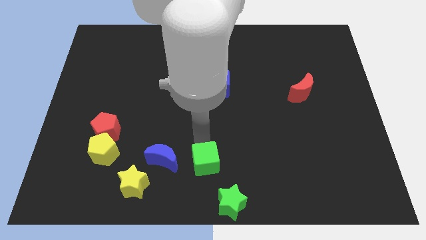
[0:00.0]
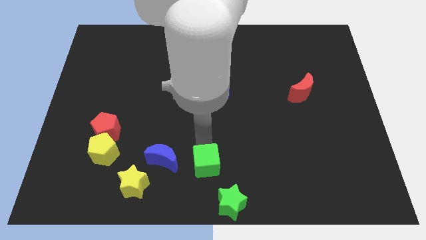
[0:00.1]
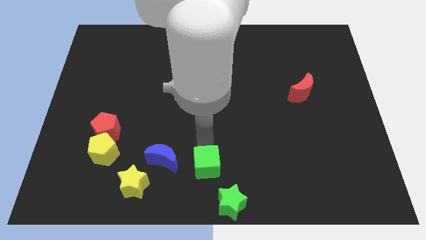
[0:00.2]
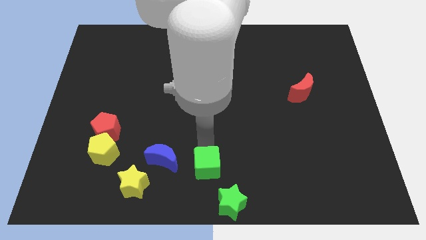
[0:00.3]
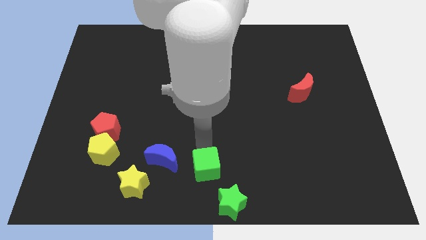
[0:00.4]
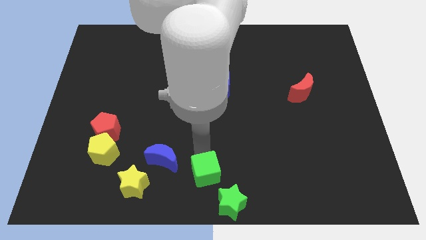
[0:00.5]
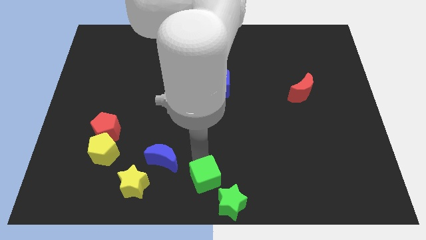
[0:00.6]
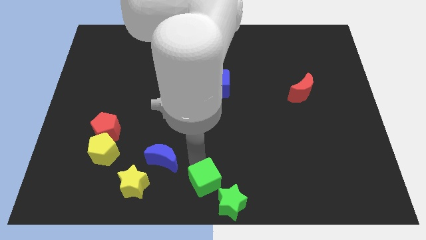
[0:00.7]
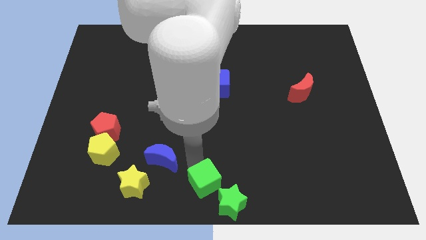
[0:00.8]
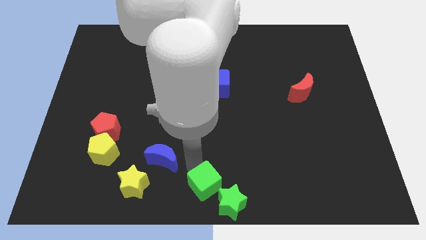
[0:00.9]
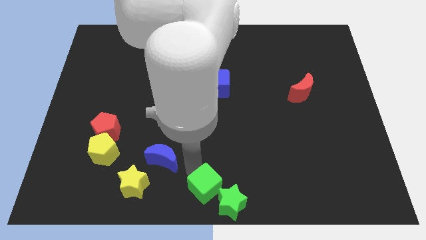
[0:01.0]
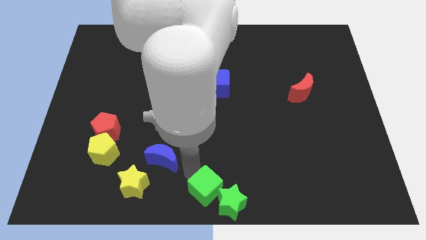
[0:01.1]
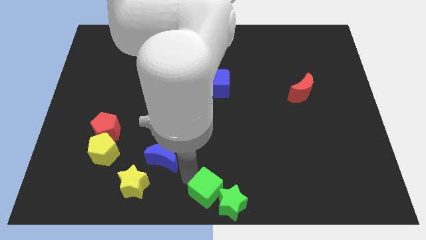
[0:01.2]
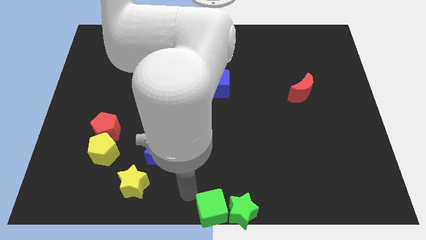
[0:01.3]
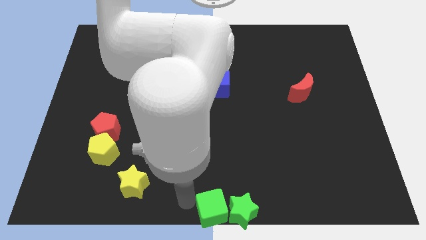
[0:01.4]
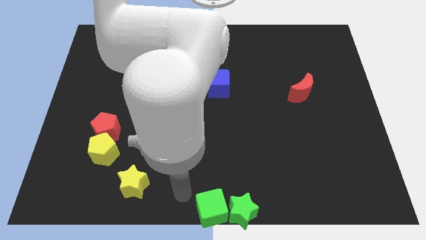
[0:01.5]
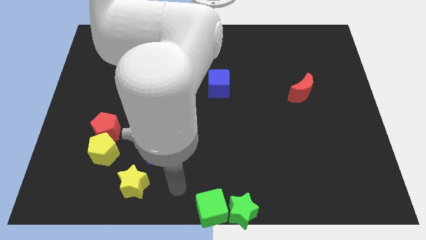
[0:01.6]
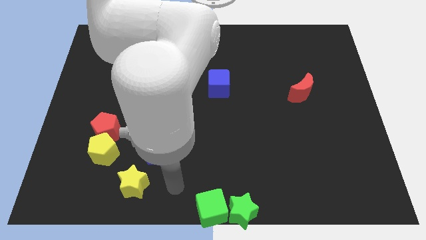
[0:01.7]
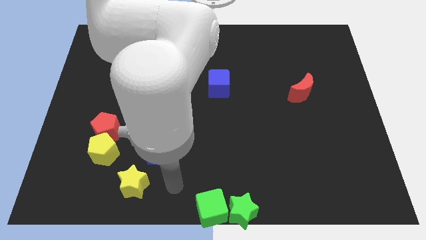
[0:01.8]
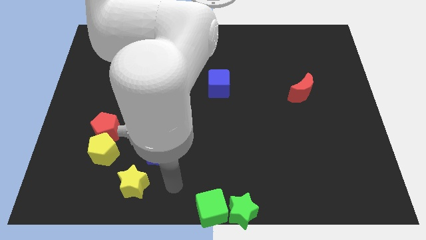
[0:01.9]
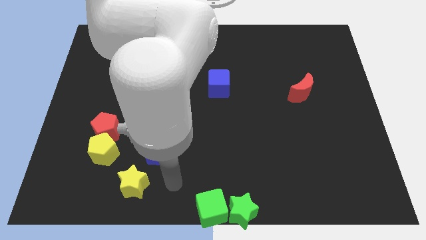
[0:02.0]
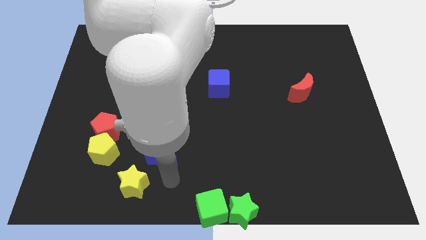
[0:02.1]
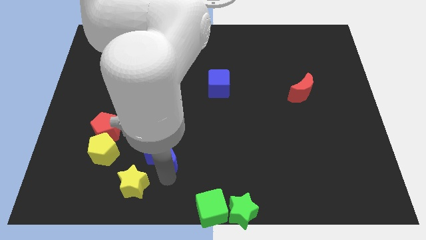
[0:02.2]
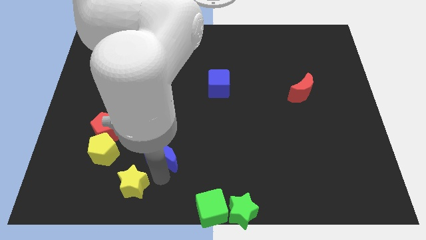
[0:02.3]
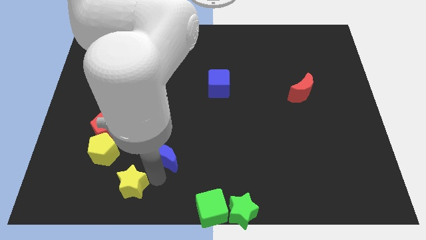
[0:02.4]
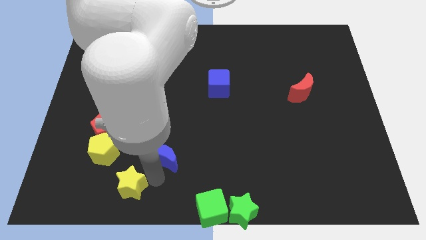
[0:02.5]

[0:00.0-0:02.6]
push the green cube to left side of the green star

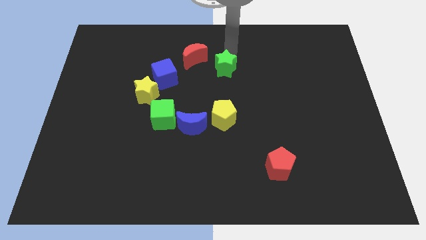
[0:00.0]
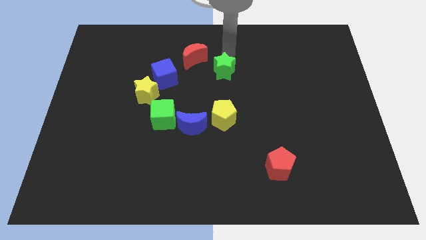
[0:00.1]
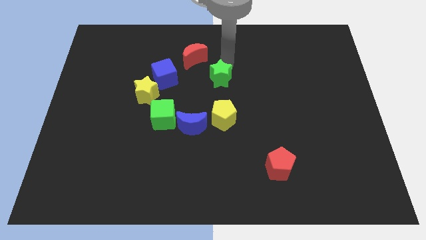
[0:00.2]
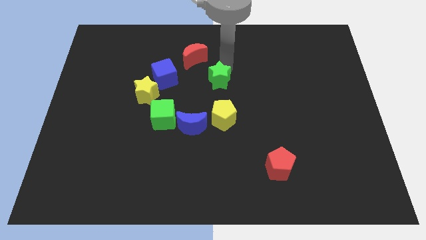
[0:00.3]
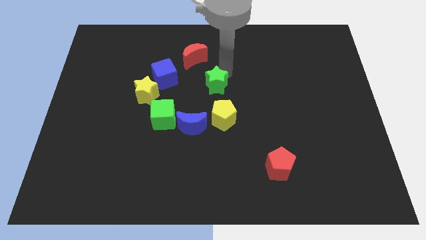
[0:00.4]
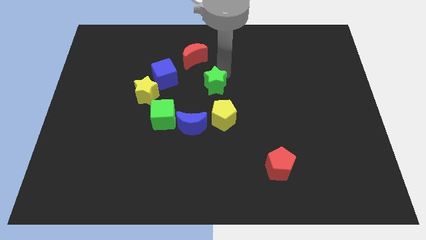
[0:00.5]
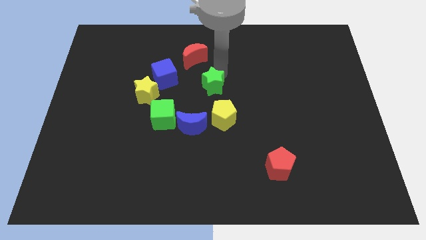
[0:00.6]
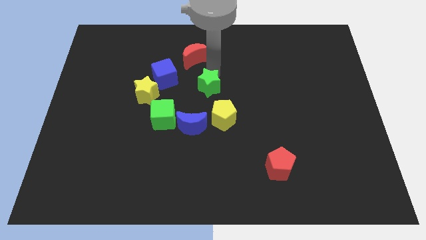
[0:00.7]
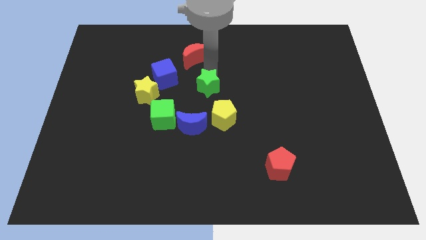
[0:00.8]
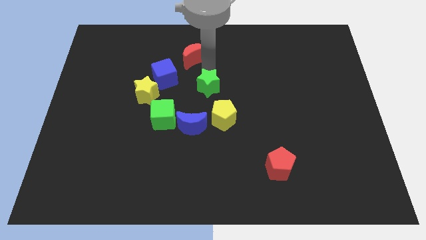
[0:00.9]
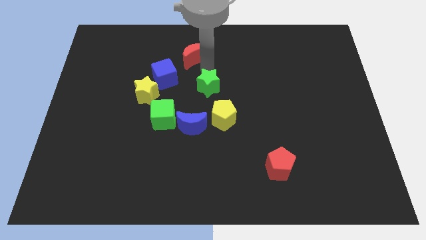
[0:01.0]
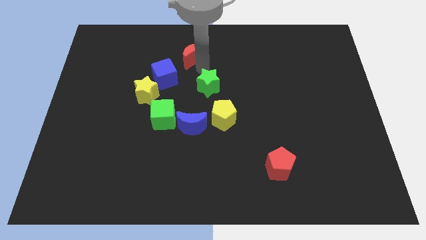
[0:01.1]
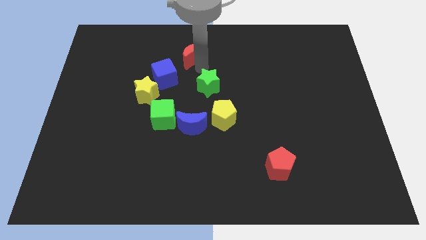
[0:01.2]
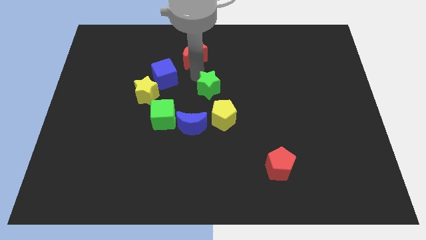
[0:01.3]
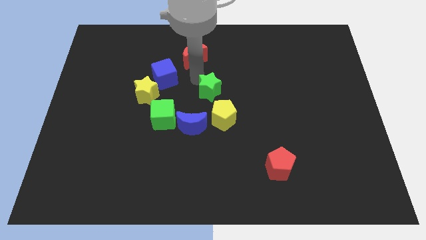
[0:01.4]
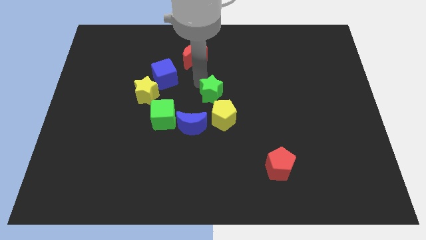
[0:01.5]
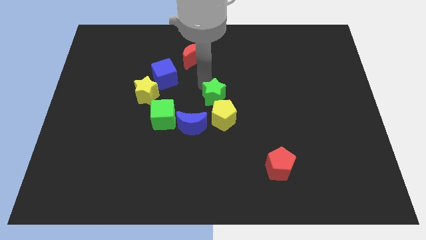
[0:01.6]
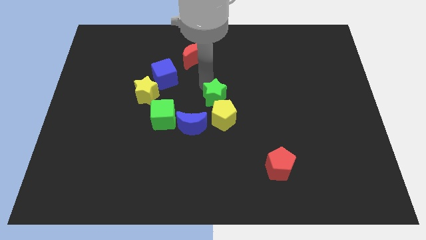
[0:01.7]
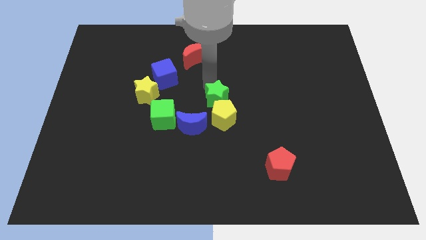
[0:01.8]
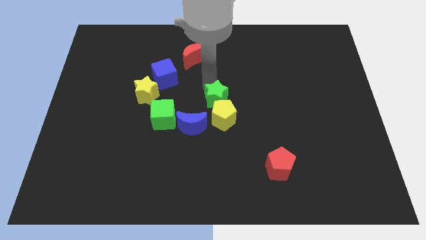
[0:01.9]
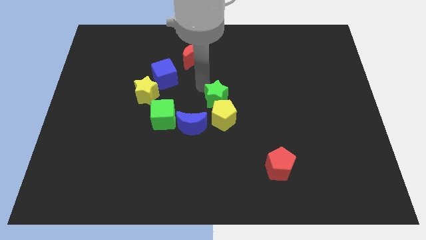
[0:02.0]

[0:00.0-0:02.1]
push the green star to the top of yellow pentagon

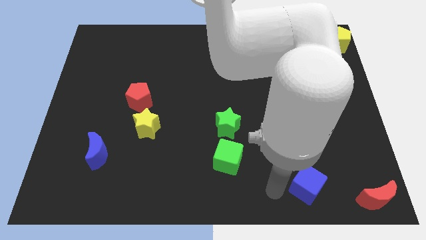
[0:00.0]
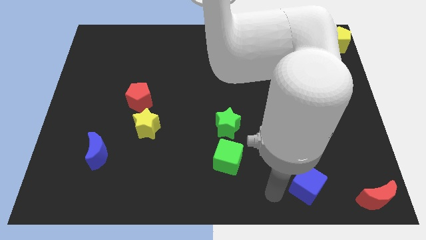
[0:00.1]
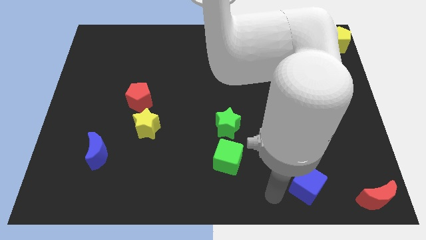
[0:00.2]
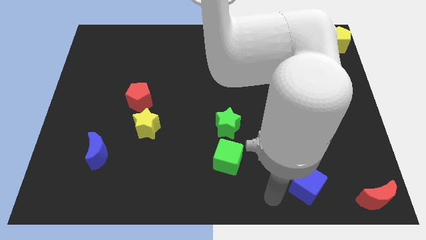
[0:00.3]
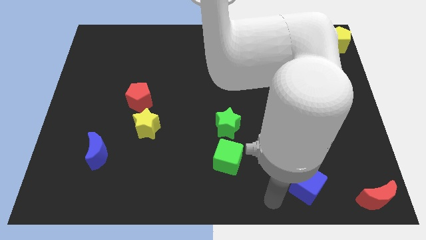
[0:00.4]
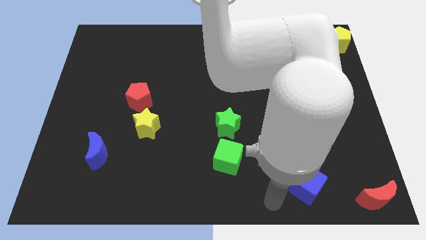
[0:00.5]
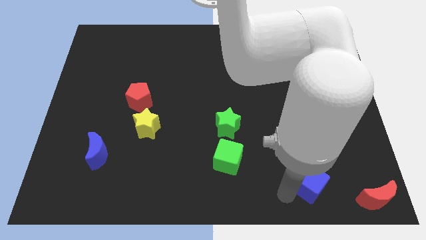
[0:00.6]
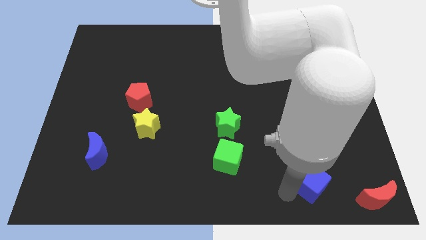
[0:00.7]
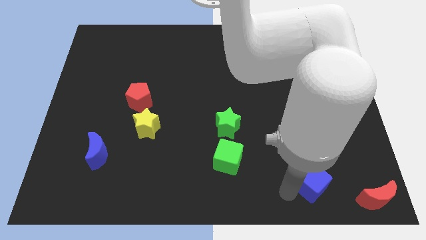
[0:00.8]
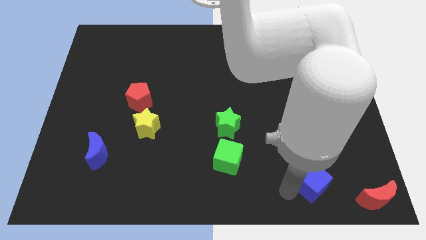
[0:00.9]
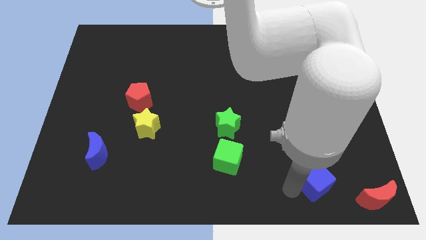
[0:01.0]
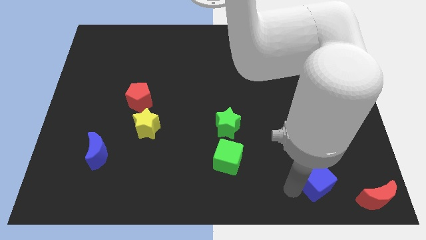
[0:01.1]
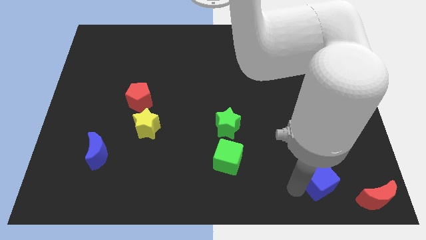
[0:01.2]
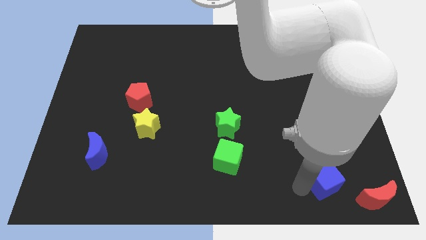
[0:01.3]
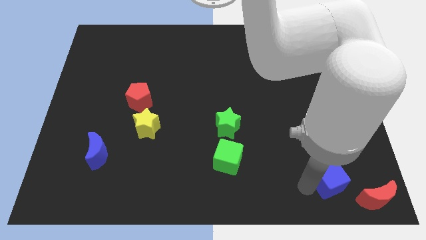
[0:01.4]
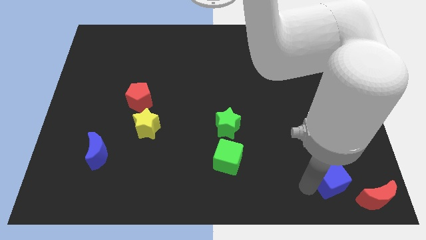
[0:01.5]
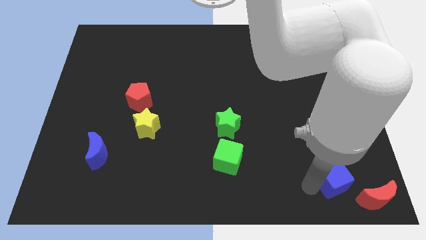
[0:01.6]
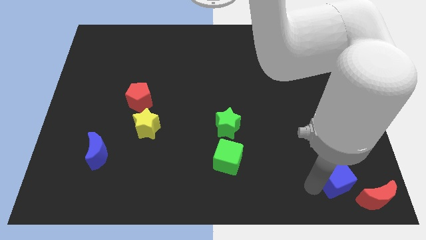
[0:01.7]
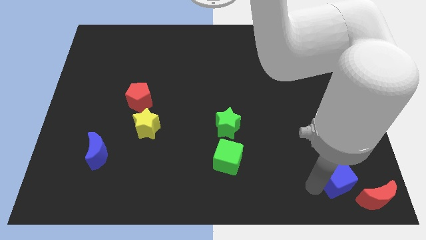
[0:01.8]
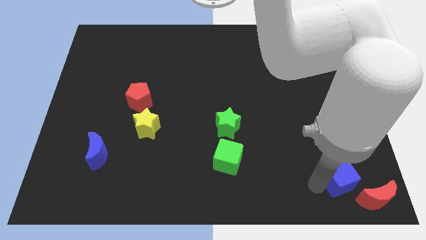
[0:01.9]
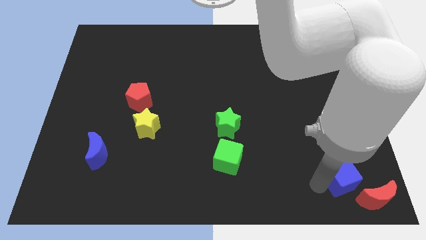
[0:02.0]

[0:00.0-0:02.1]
place blue cube on the top left side of red crescent

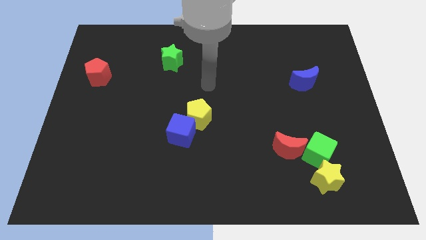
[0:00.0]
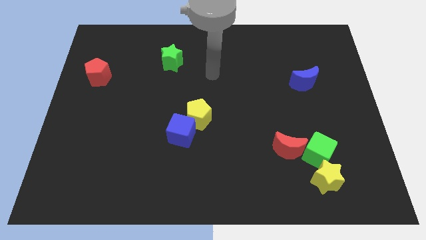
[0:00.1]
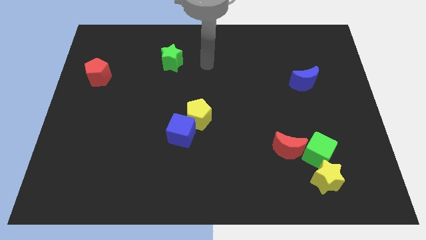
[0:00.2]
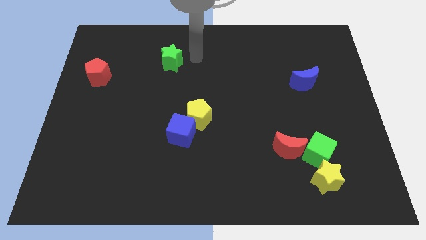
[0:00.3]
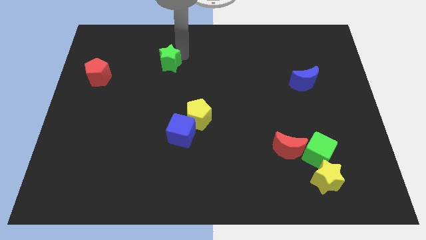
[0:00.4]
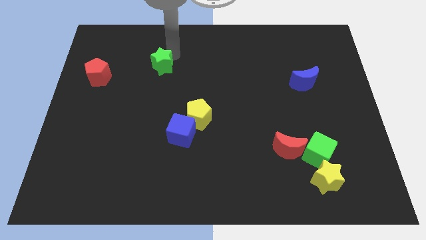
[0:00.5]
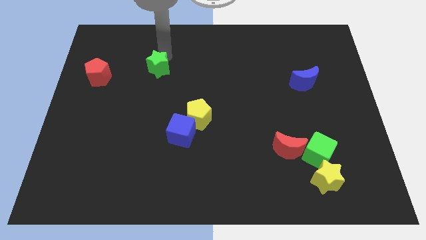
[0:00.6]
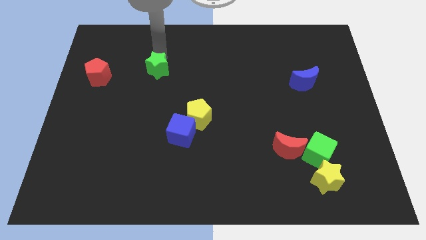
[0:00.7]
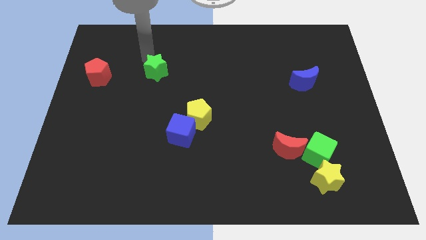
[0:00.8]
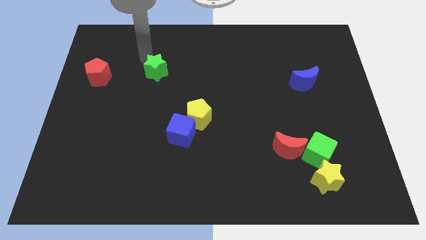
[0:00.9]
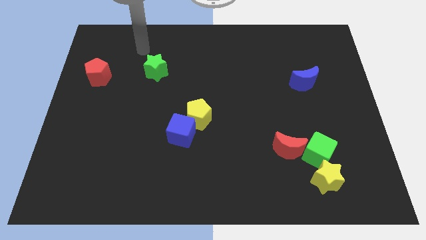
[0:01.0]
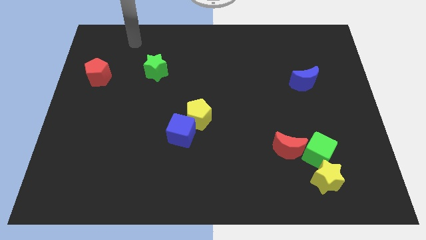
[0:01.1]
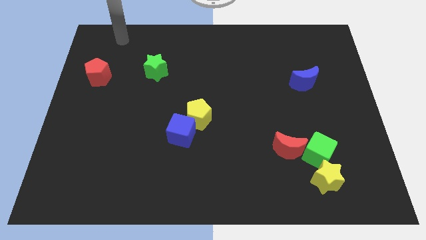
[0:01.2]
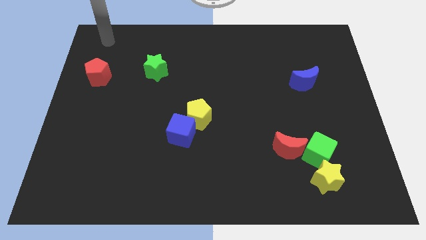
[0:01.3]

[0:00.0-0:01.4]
slightly push green star downwards

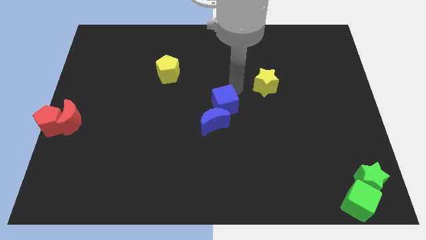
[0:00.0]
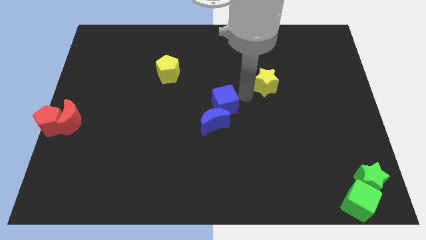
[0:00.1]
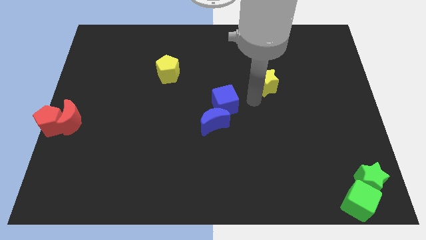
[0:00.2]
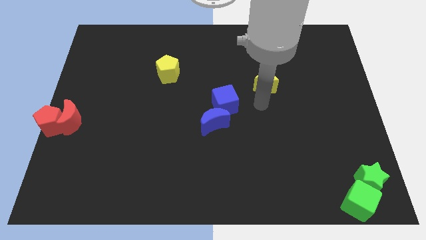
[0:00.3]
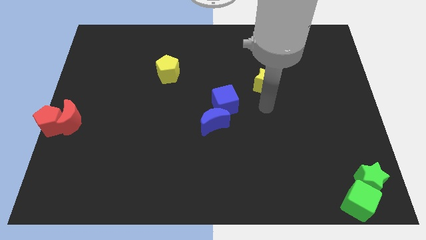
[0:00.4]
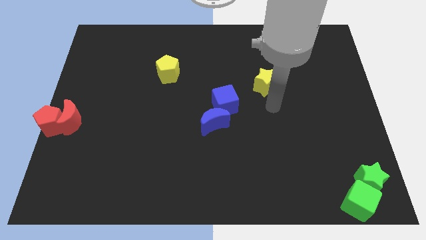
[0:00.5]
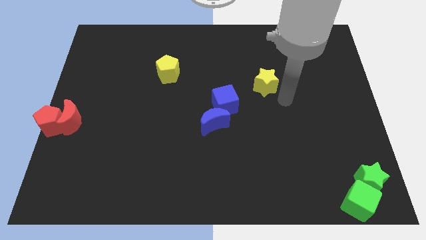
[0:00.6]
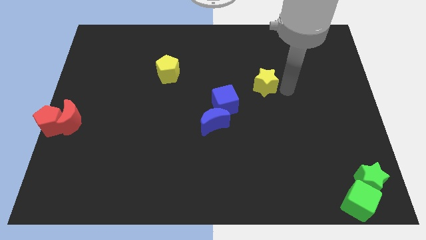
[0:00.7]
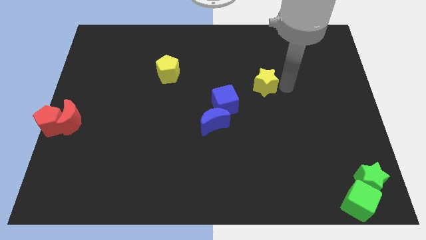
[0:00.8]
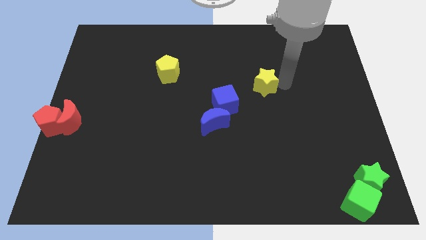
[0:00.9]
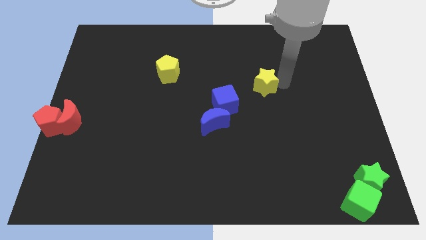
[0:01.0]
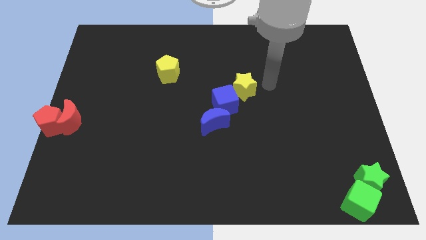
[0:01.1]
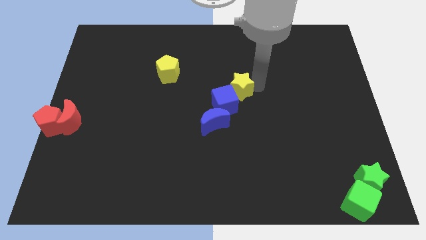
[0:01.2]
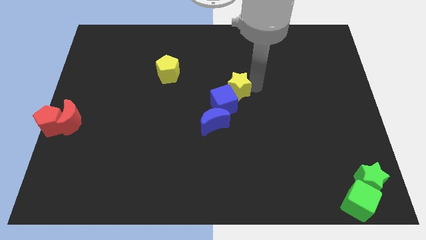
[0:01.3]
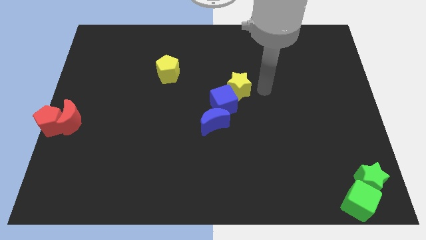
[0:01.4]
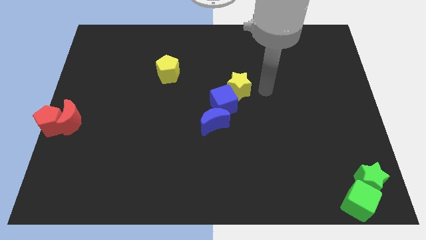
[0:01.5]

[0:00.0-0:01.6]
push the yellow star close to blue cube in the center of the board
